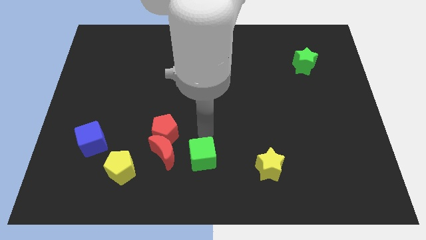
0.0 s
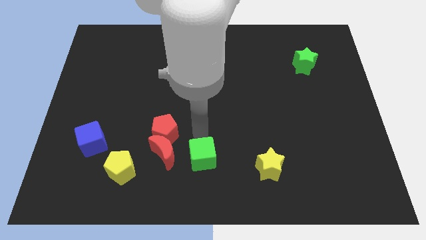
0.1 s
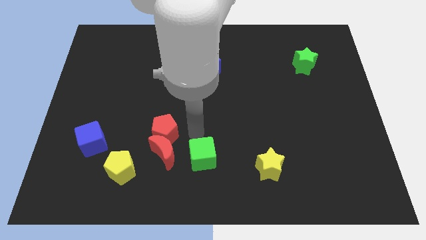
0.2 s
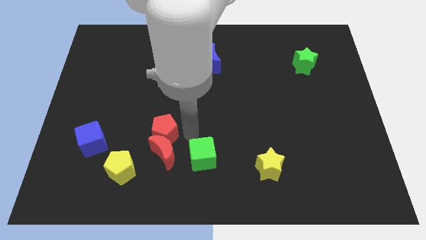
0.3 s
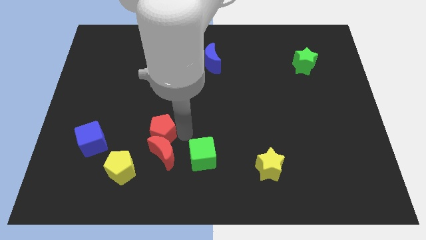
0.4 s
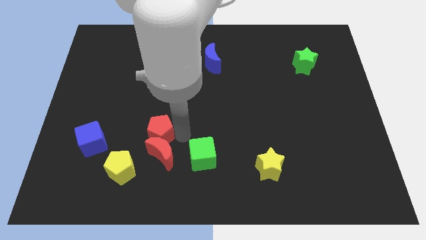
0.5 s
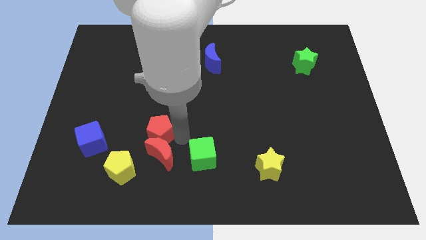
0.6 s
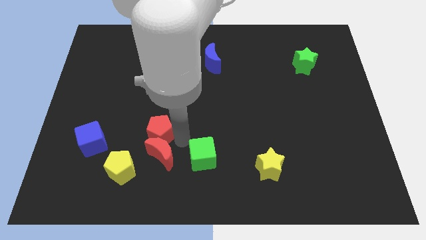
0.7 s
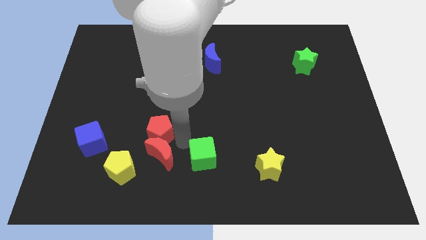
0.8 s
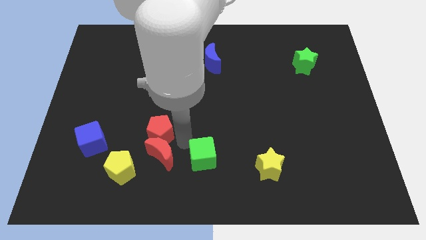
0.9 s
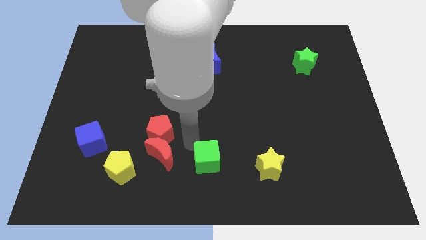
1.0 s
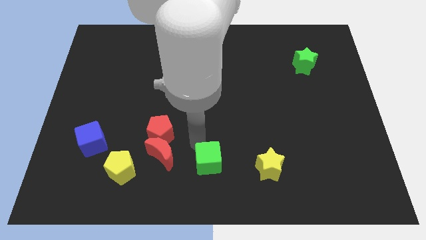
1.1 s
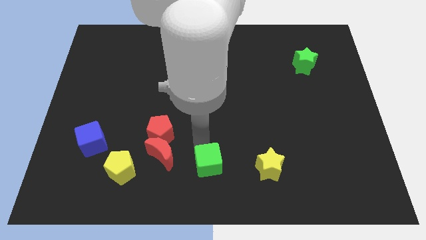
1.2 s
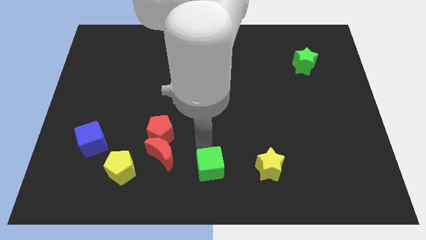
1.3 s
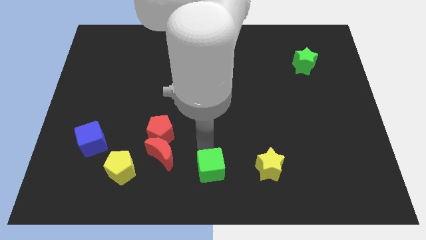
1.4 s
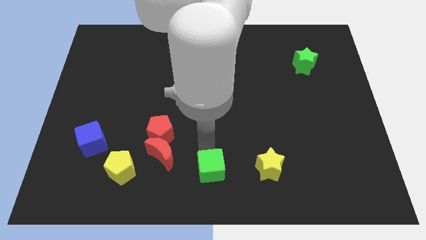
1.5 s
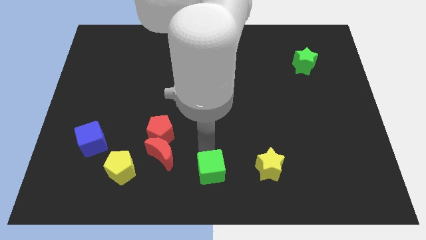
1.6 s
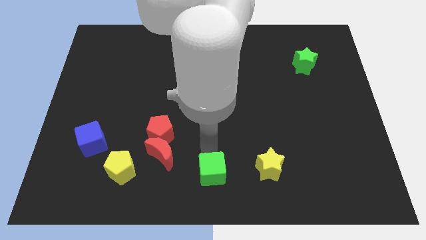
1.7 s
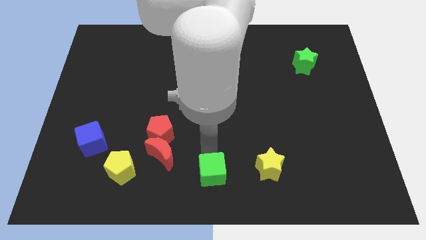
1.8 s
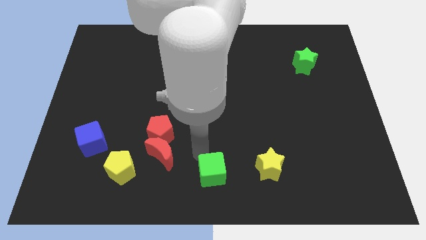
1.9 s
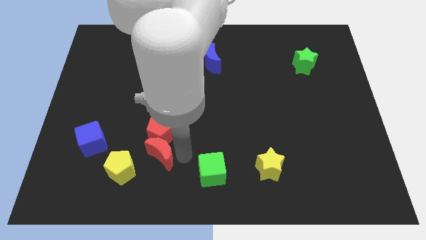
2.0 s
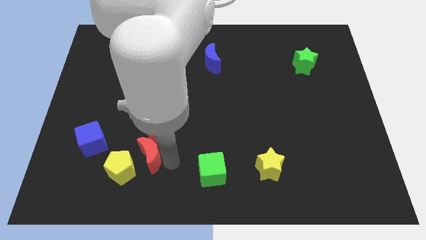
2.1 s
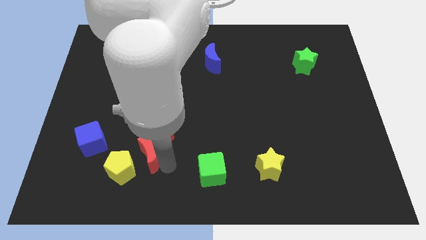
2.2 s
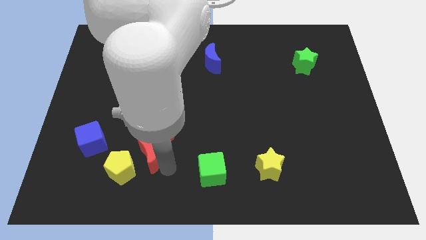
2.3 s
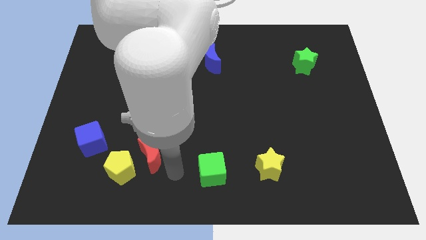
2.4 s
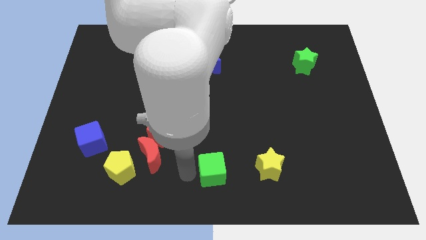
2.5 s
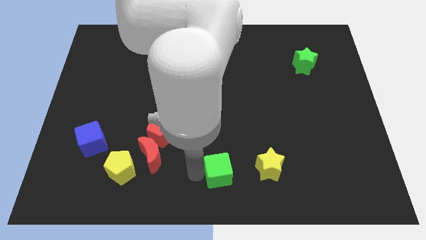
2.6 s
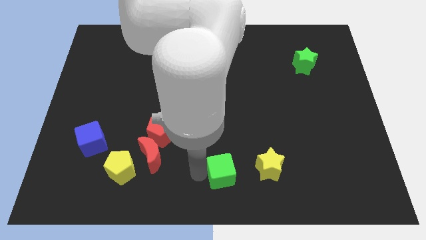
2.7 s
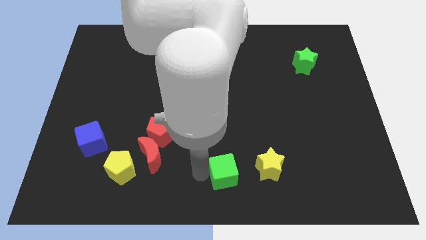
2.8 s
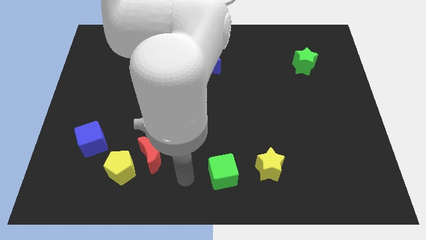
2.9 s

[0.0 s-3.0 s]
move the green star slightly downwards

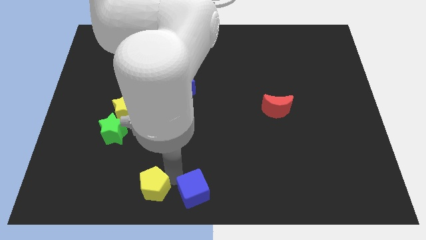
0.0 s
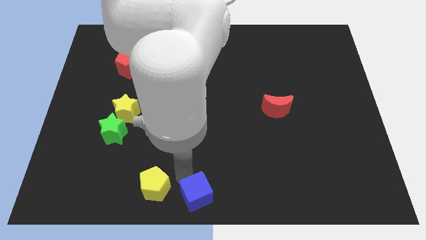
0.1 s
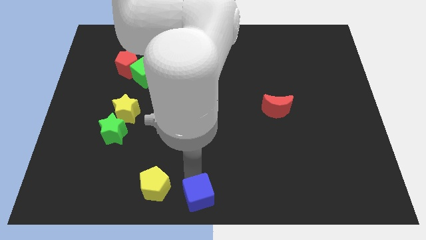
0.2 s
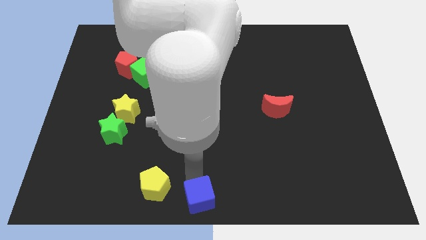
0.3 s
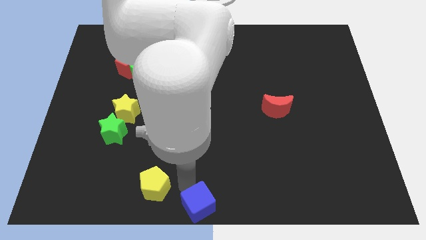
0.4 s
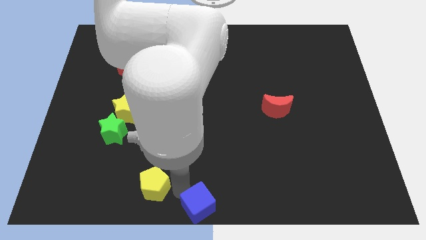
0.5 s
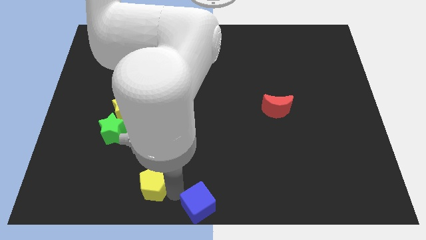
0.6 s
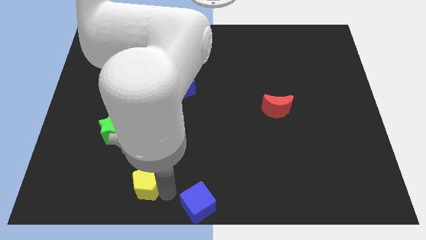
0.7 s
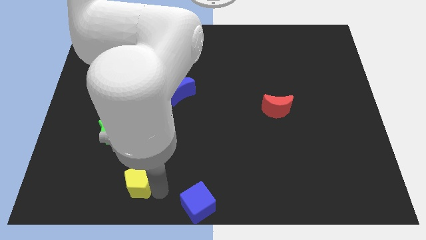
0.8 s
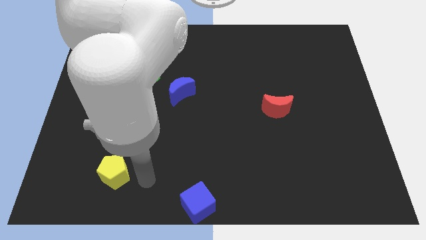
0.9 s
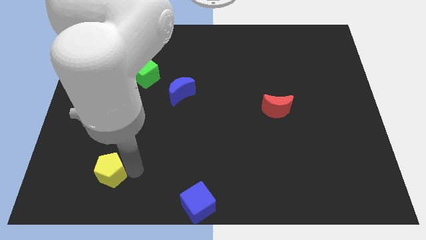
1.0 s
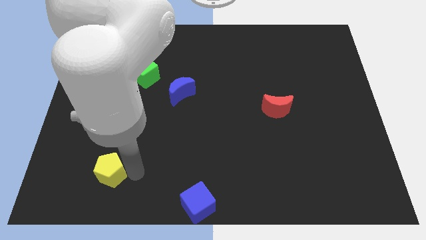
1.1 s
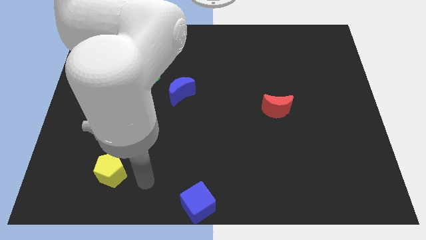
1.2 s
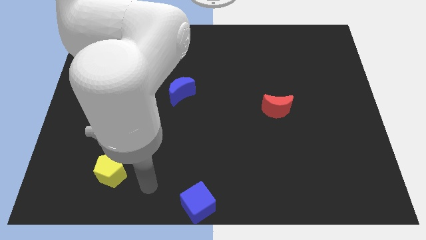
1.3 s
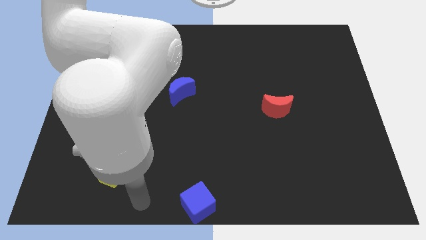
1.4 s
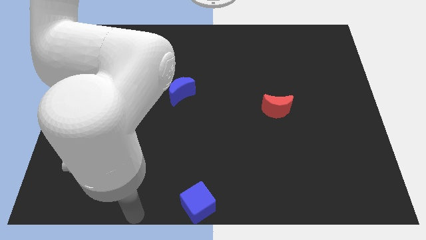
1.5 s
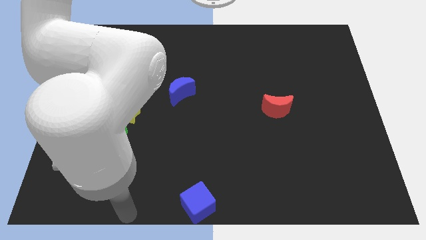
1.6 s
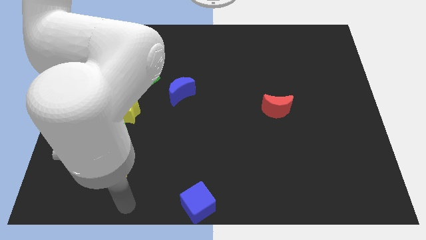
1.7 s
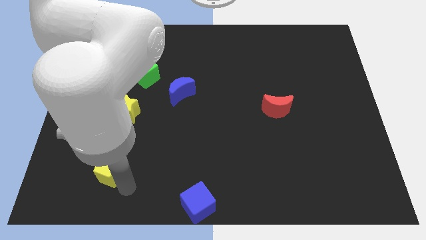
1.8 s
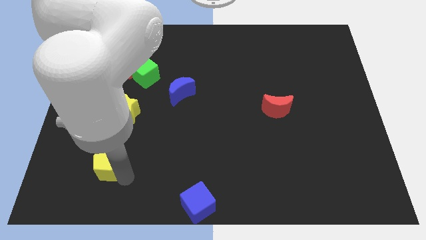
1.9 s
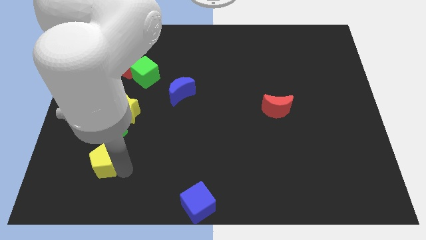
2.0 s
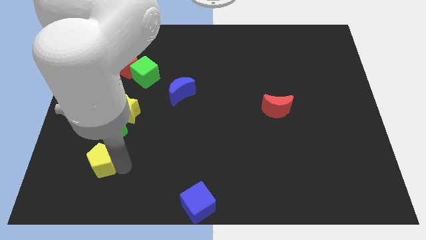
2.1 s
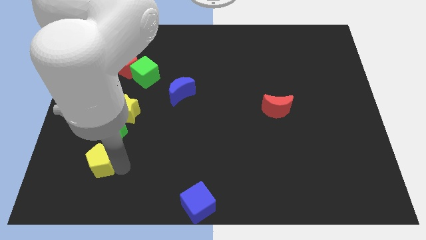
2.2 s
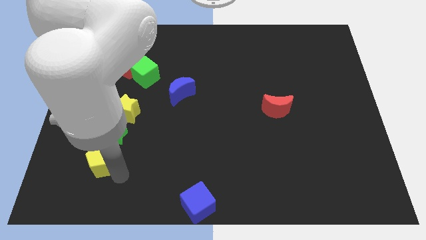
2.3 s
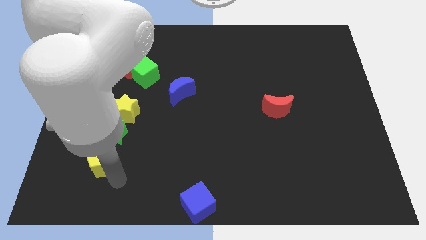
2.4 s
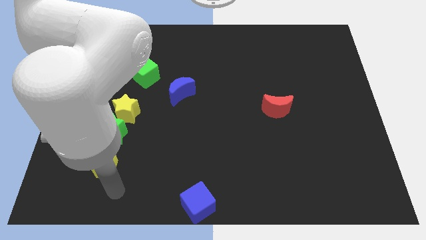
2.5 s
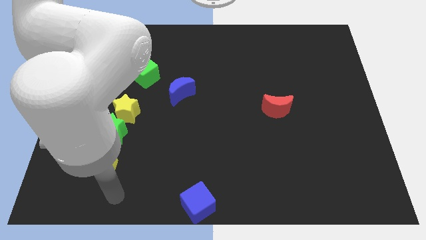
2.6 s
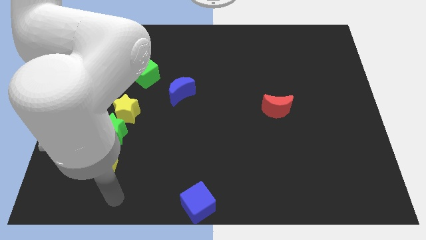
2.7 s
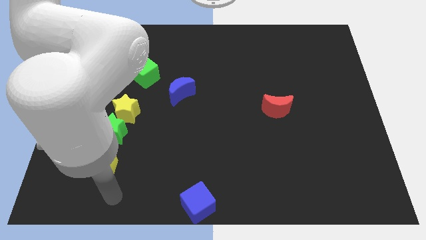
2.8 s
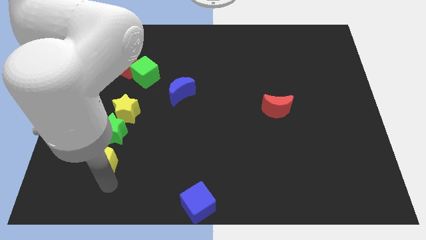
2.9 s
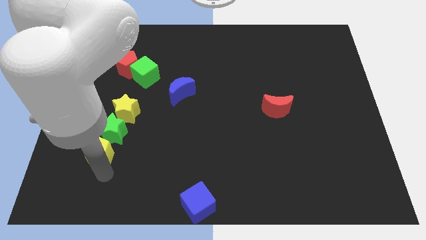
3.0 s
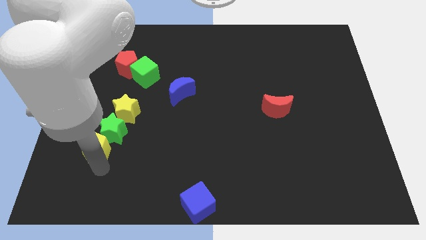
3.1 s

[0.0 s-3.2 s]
move the yellow pentagon below the green star

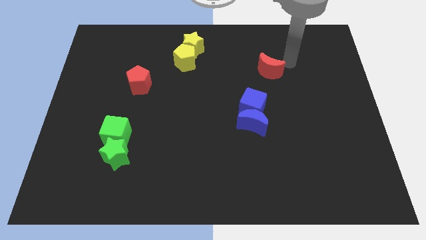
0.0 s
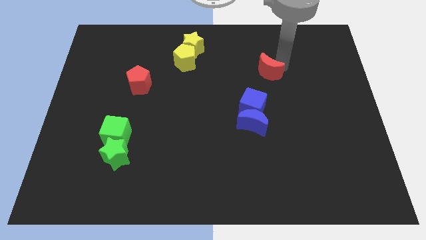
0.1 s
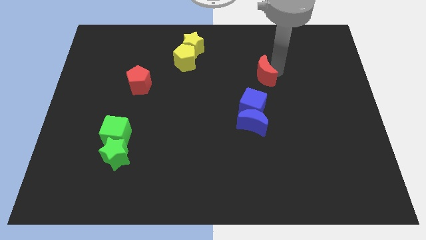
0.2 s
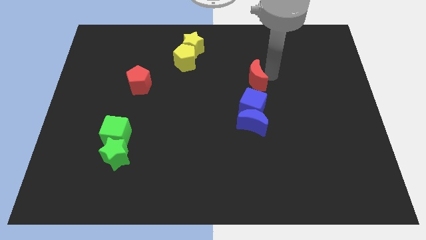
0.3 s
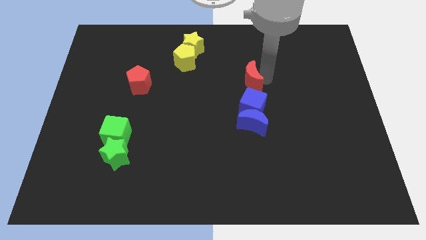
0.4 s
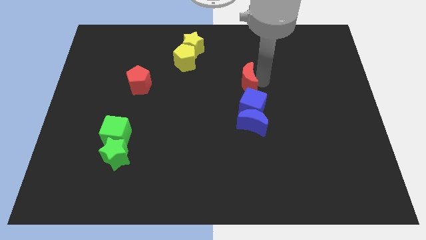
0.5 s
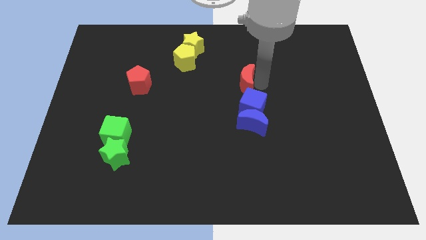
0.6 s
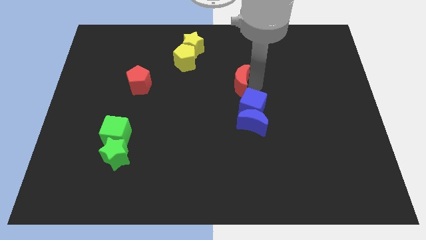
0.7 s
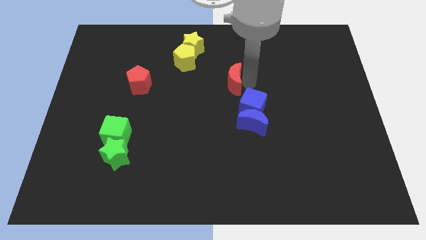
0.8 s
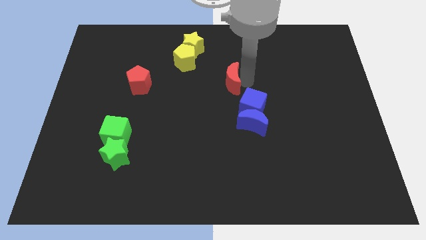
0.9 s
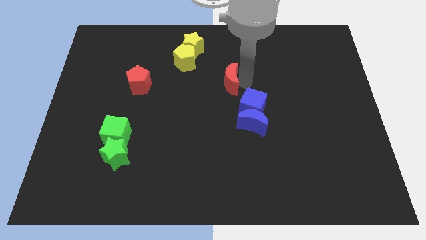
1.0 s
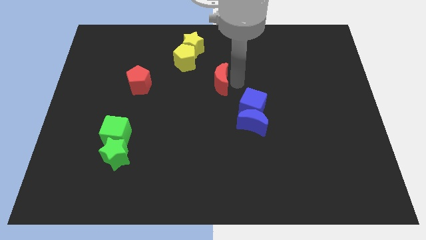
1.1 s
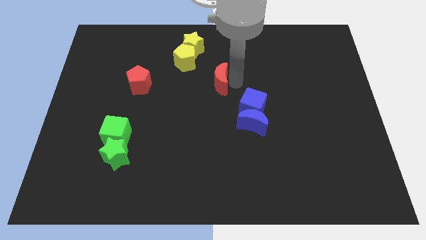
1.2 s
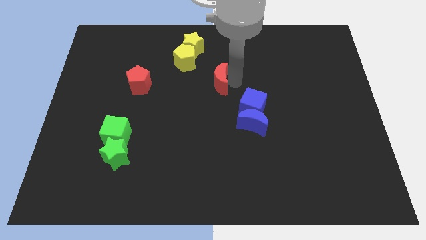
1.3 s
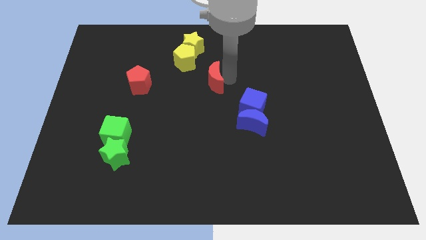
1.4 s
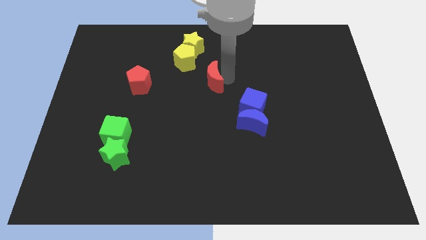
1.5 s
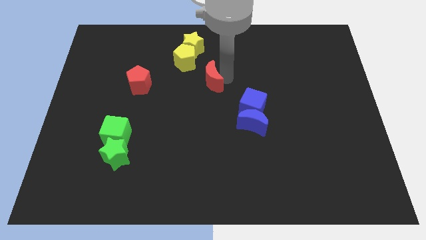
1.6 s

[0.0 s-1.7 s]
push the red moon in between the yellow pentagon and blue cube

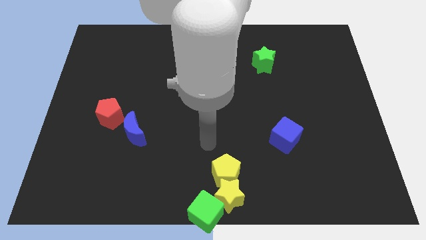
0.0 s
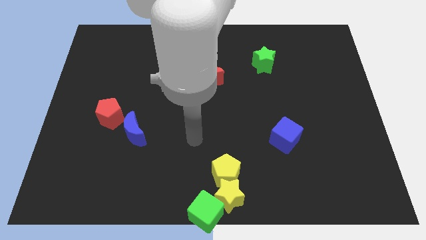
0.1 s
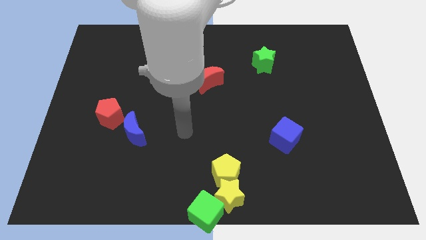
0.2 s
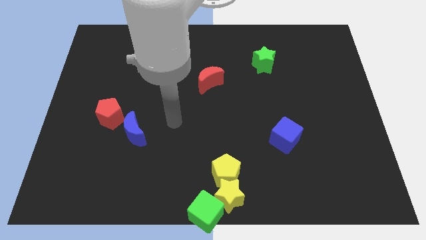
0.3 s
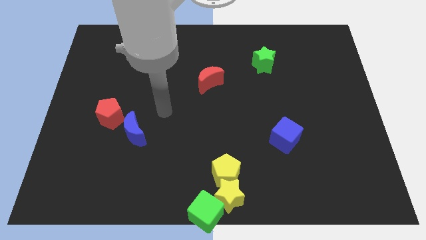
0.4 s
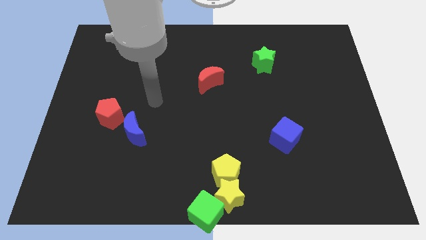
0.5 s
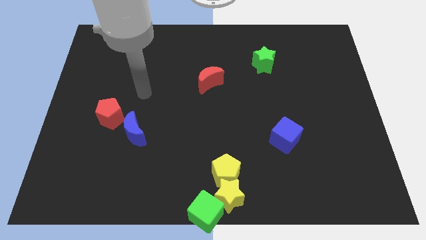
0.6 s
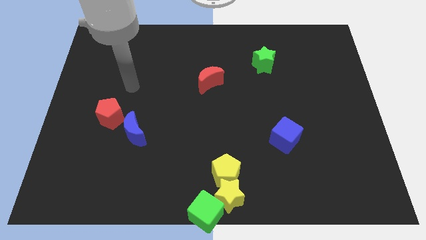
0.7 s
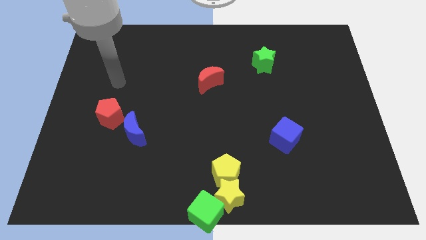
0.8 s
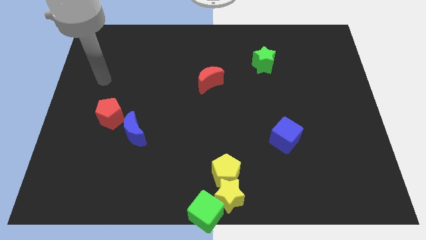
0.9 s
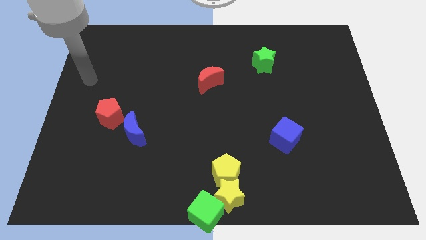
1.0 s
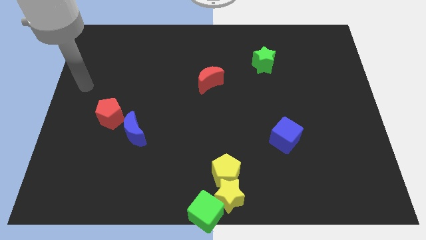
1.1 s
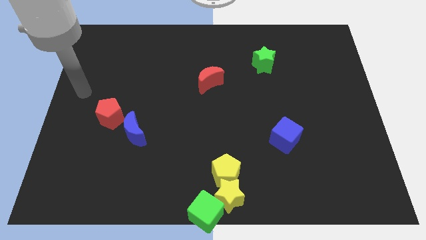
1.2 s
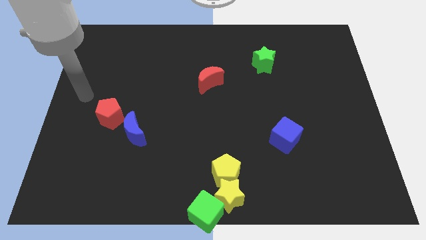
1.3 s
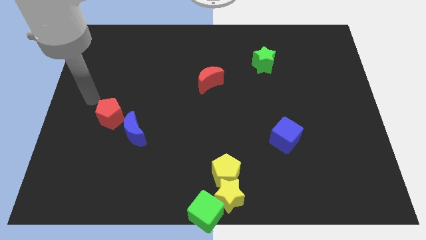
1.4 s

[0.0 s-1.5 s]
move your arm to the left center of the board
